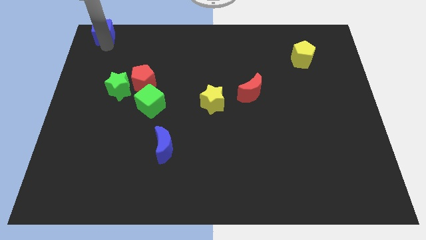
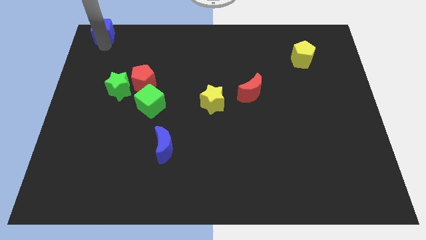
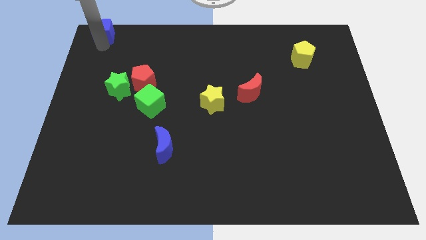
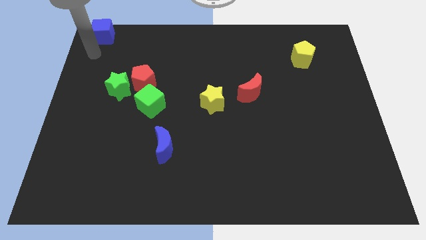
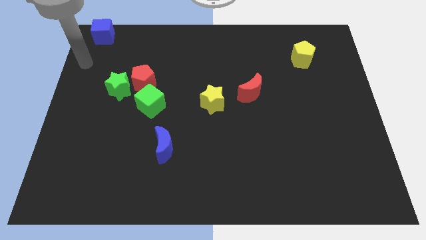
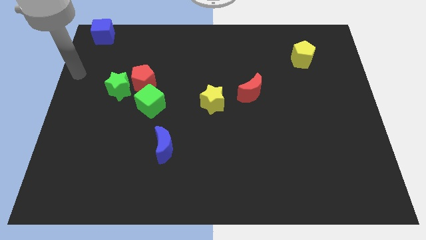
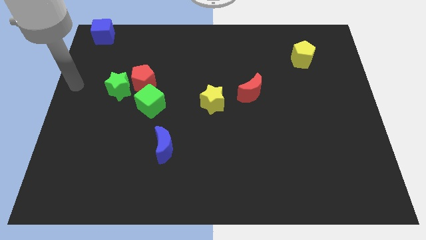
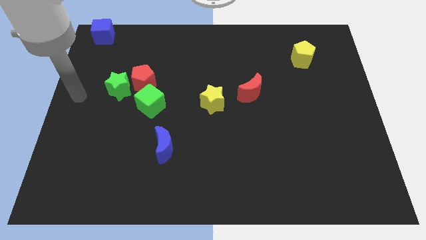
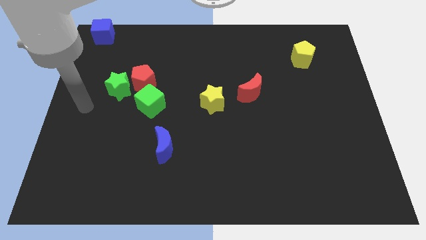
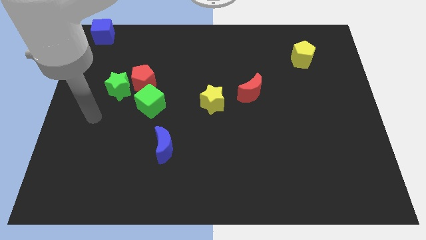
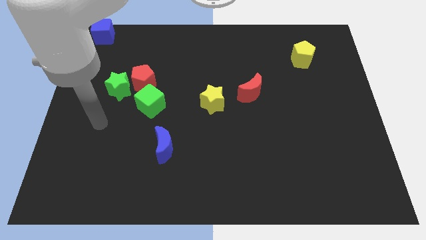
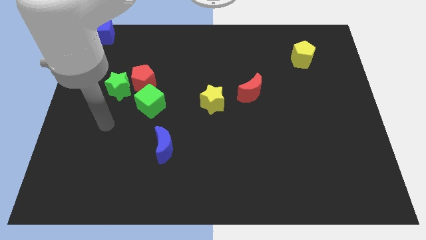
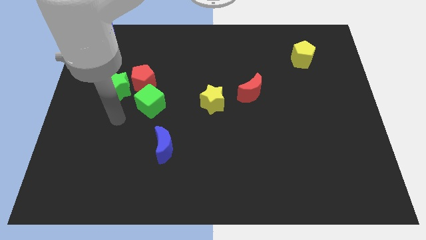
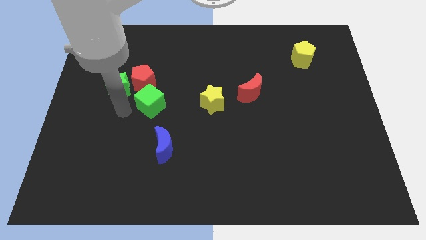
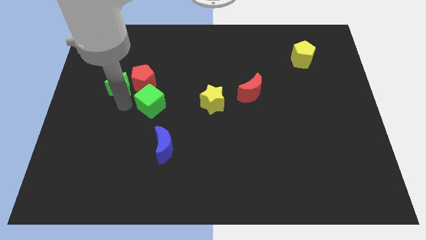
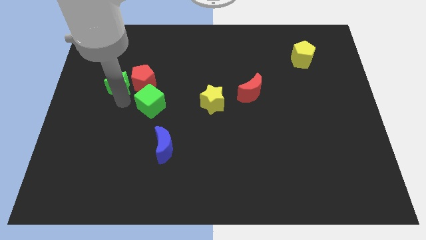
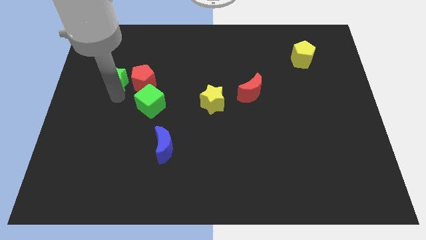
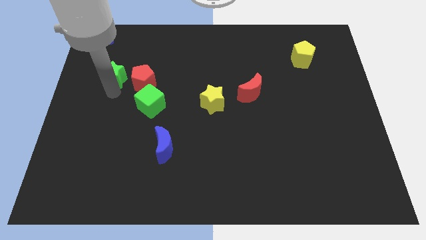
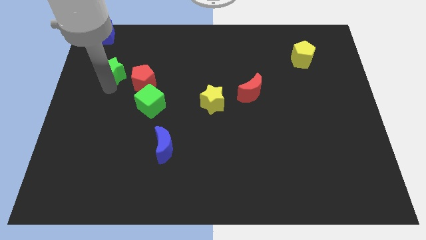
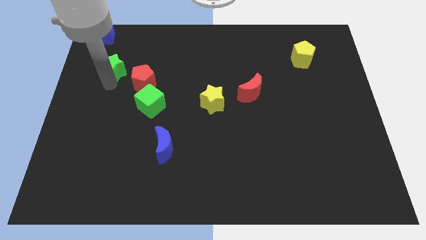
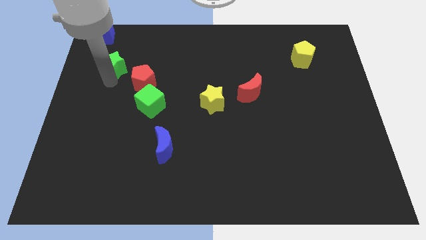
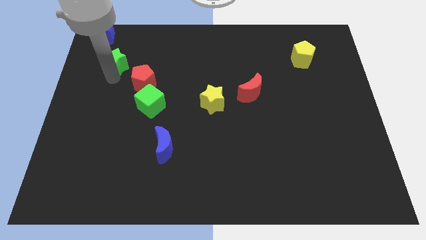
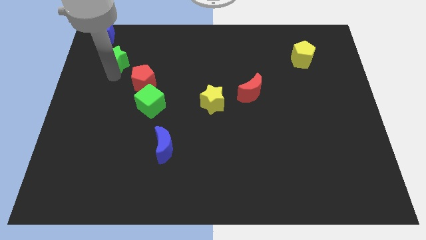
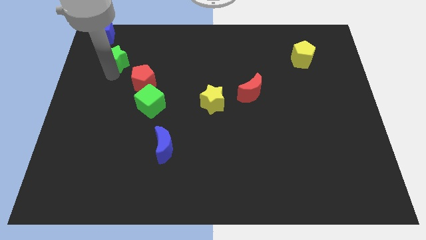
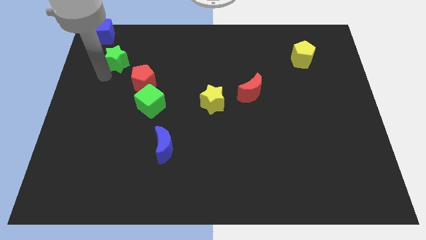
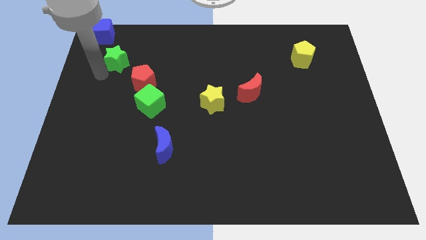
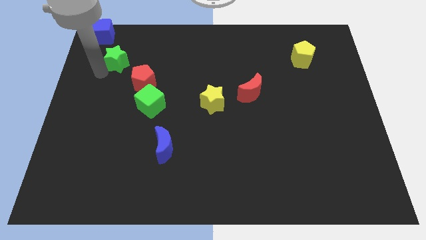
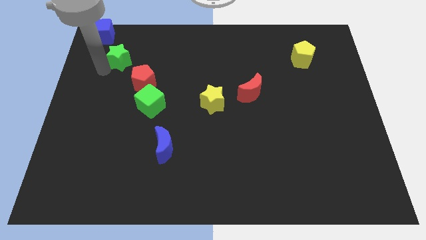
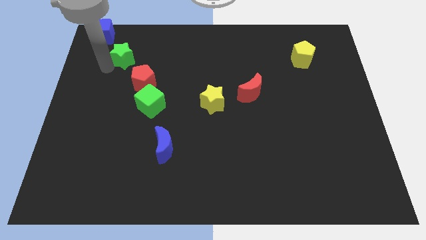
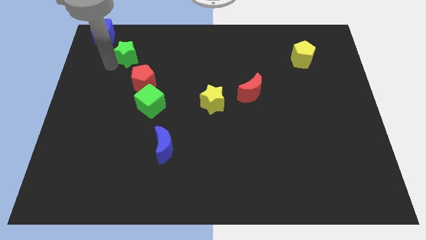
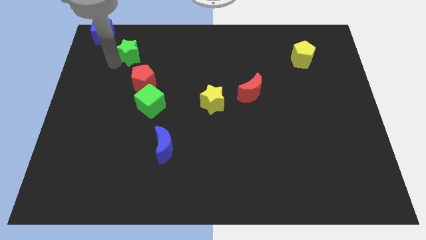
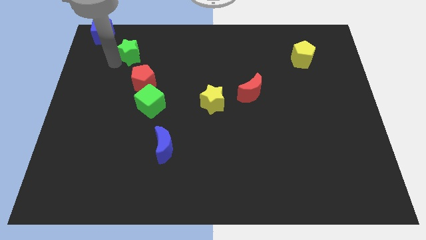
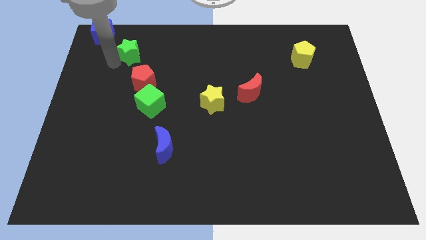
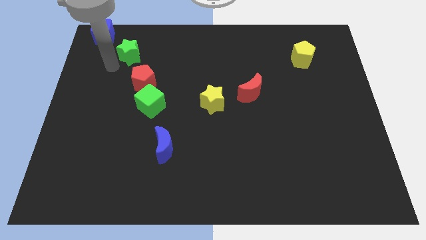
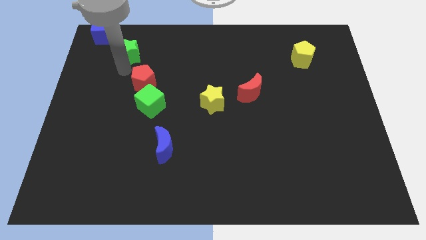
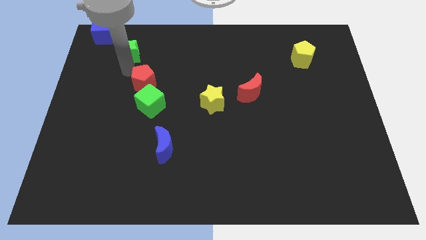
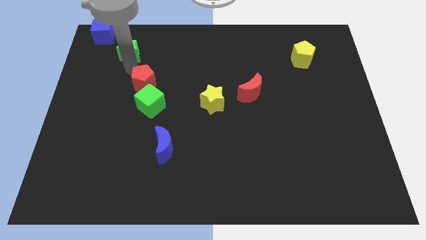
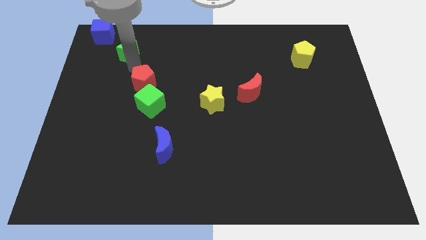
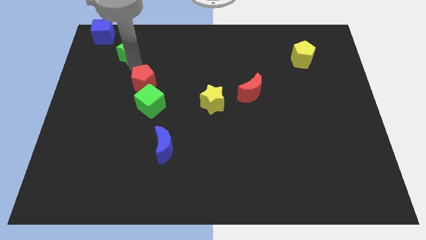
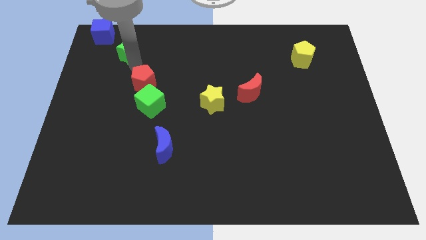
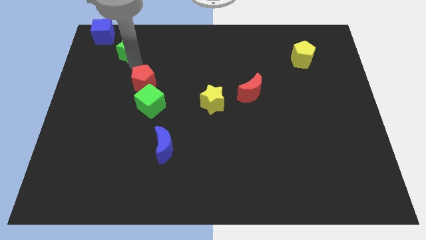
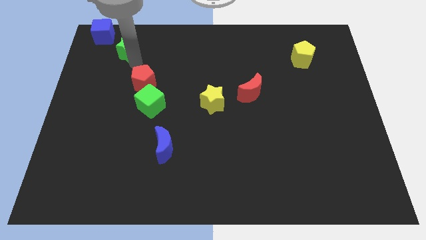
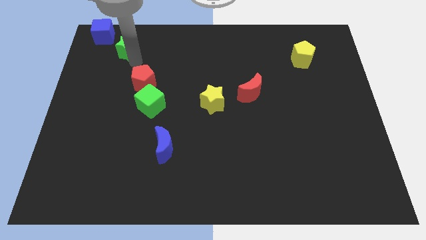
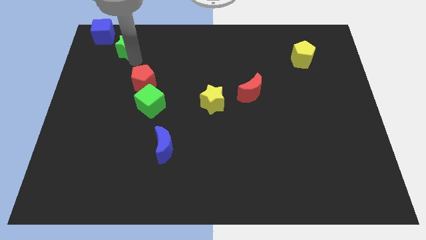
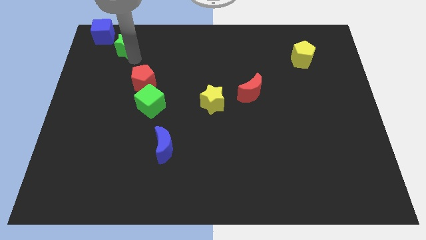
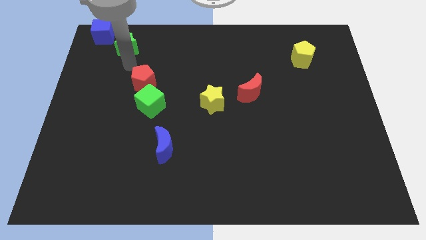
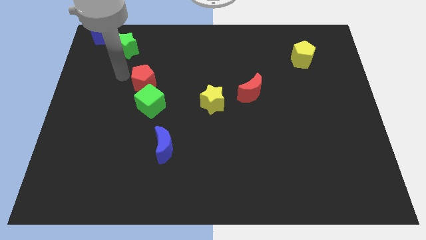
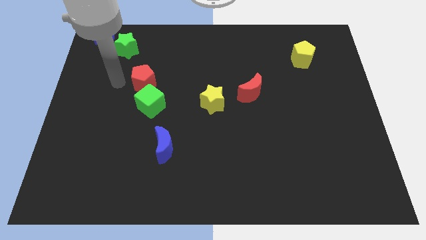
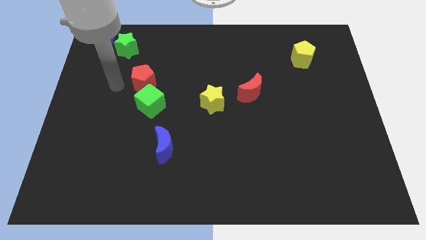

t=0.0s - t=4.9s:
move the green star right below the blue cube

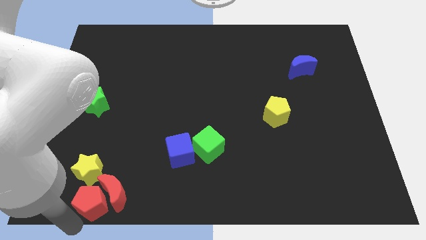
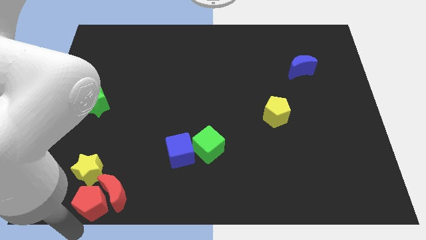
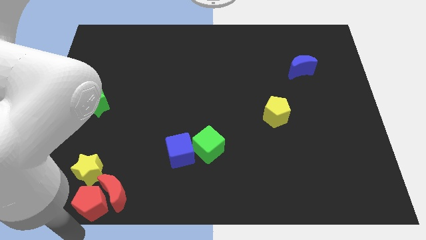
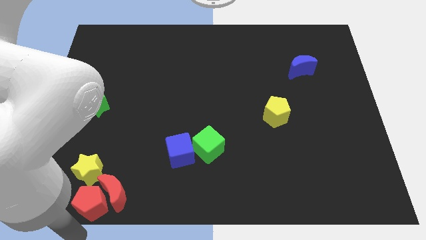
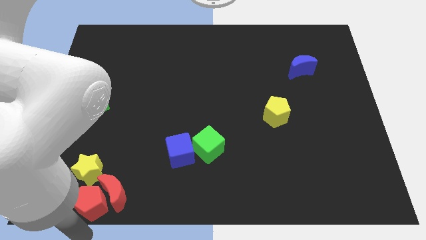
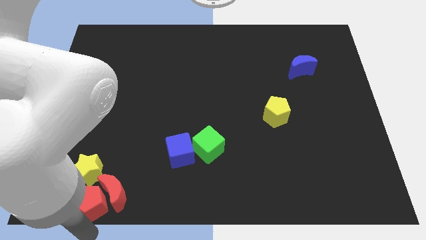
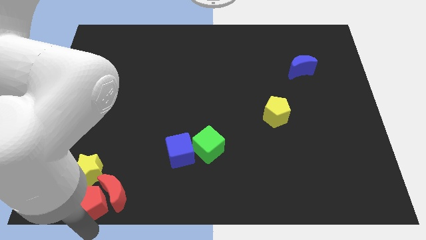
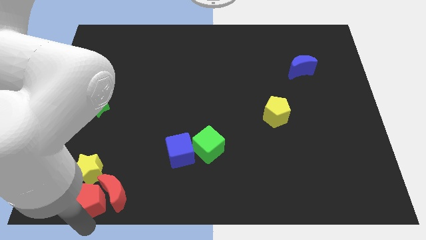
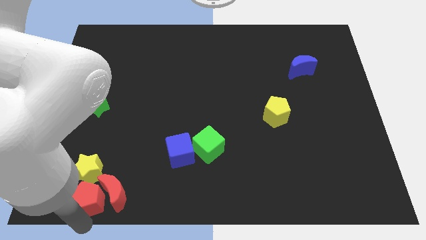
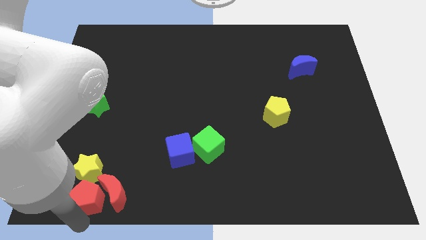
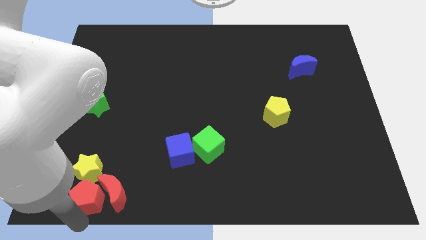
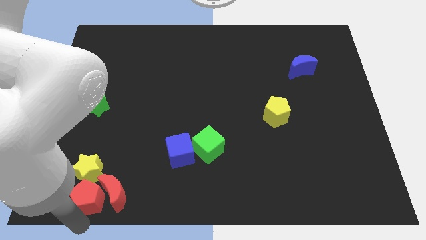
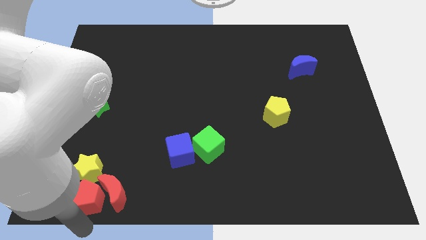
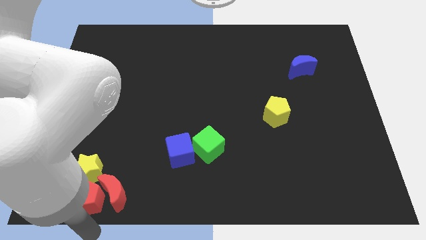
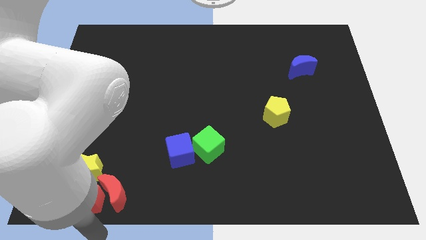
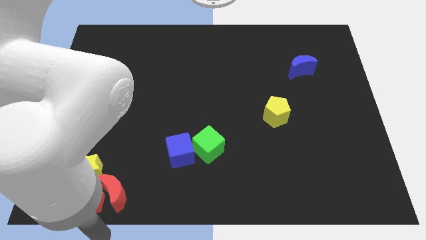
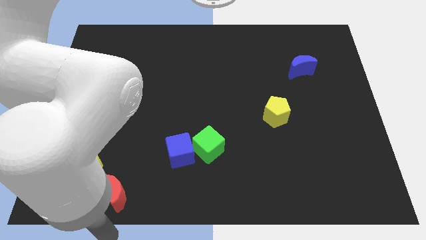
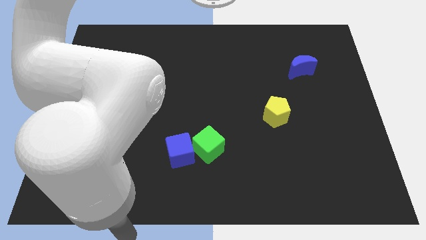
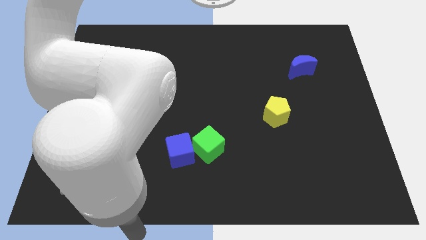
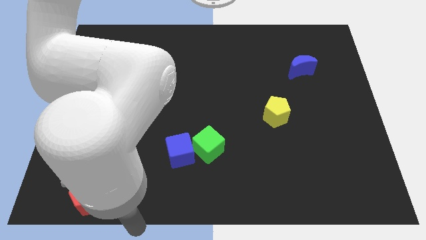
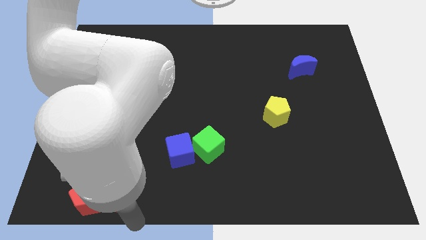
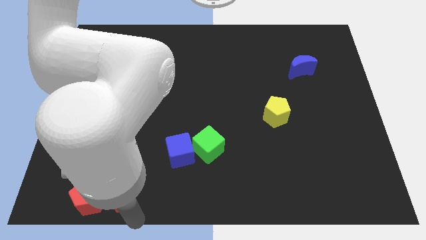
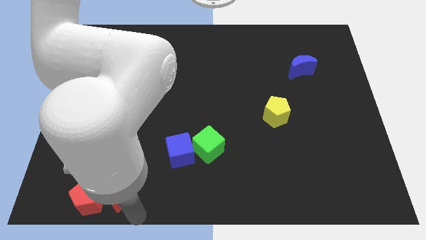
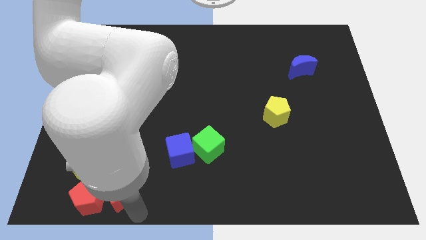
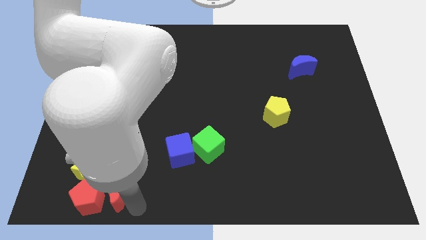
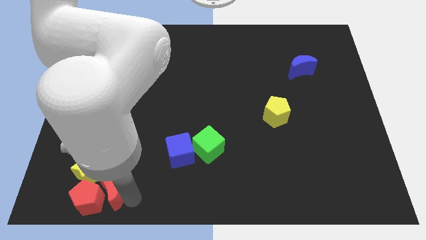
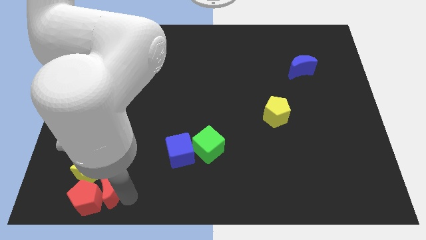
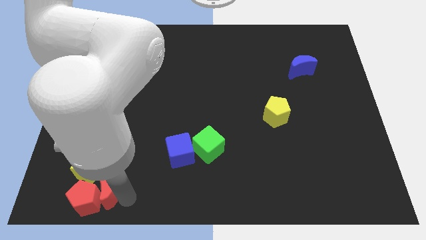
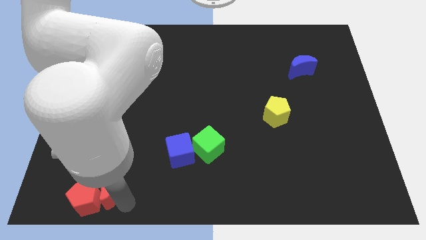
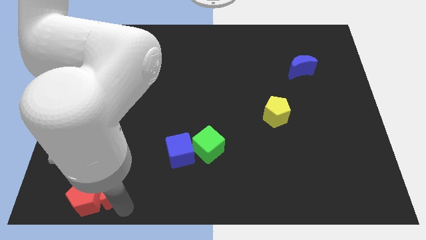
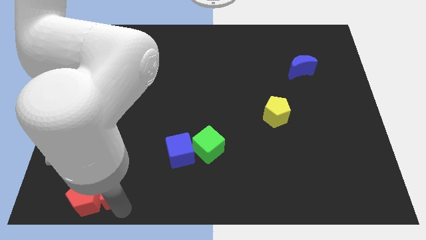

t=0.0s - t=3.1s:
slightly push red moon towards left

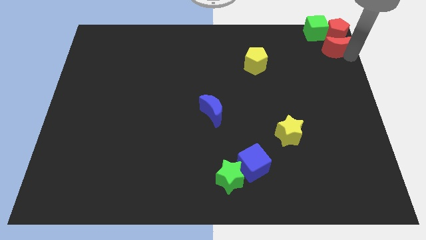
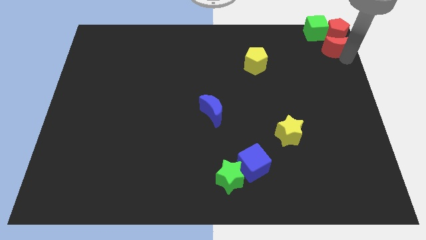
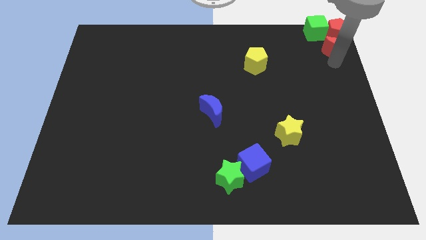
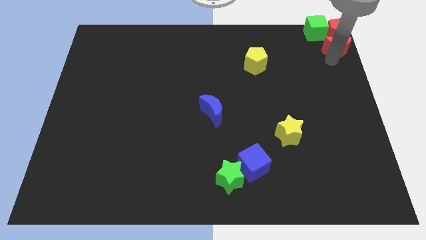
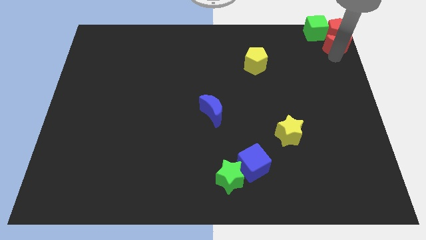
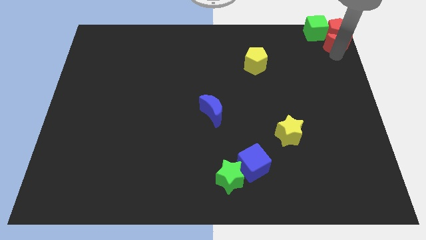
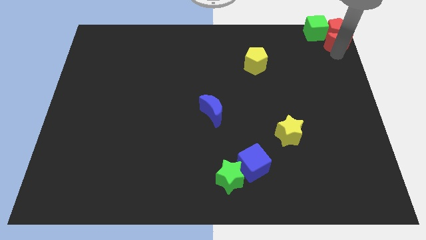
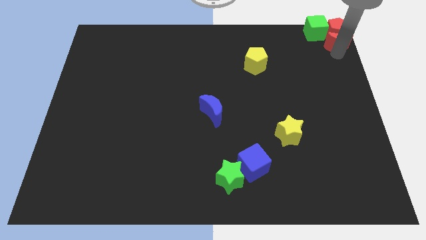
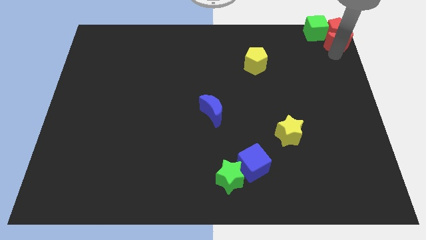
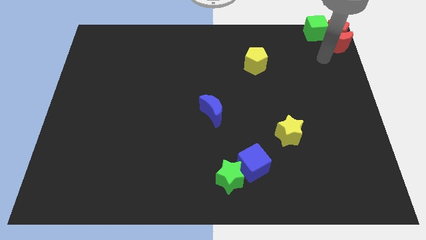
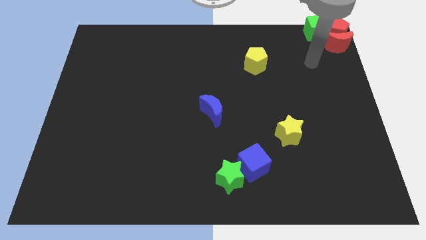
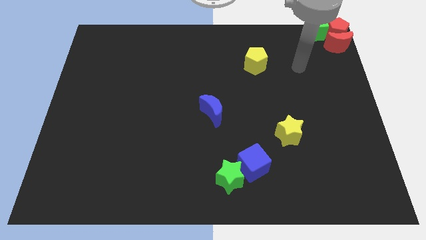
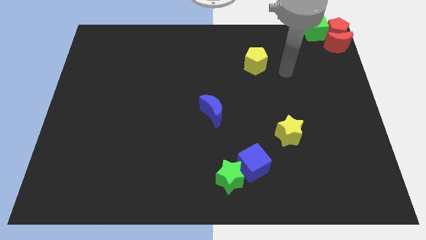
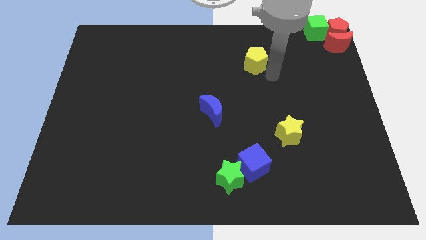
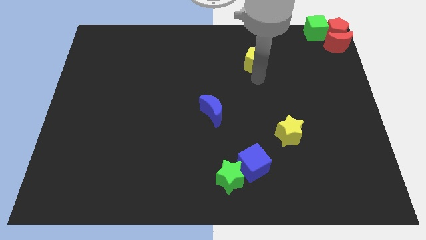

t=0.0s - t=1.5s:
push the red moon into the red pentagon
